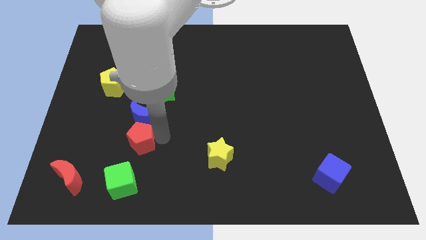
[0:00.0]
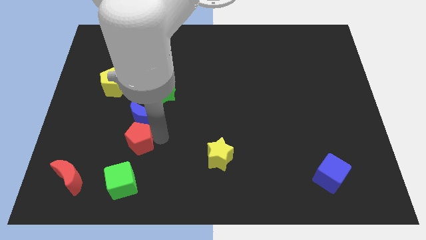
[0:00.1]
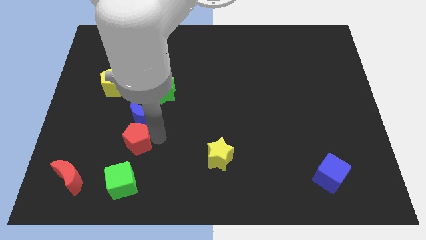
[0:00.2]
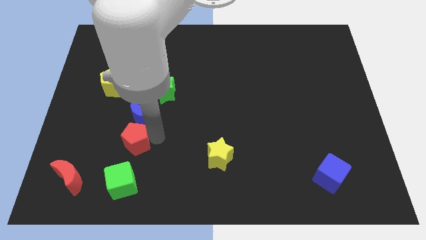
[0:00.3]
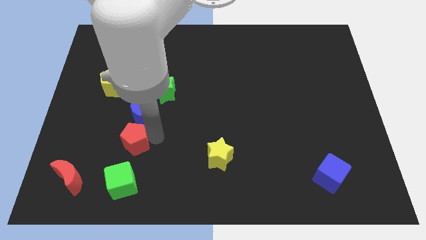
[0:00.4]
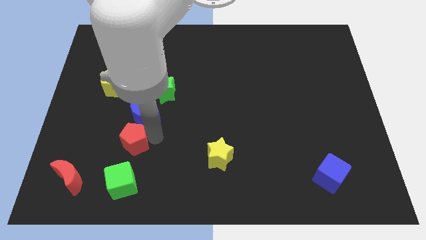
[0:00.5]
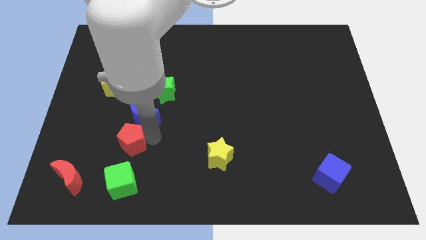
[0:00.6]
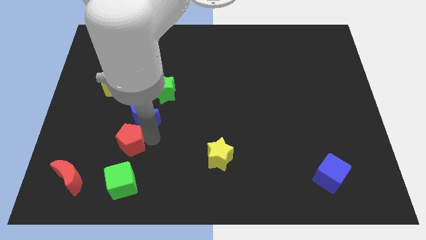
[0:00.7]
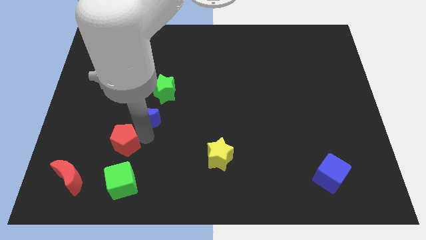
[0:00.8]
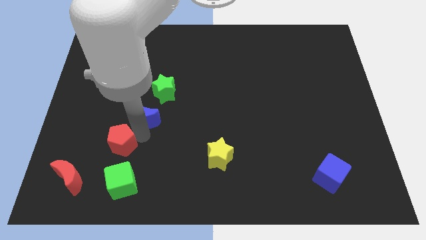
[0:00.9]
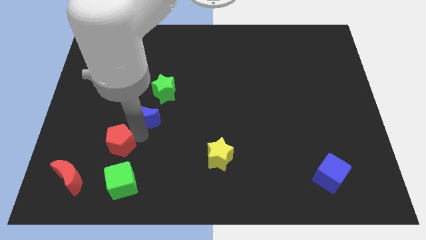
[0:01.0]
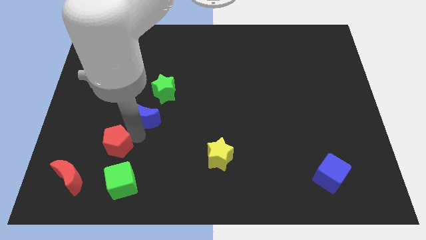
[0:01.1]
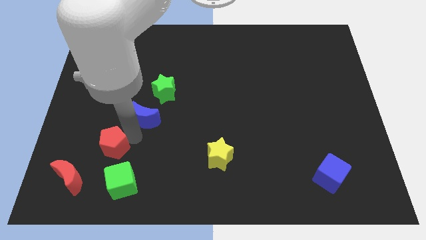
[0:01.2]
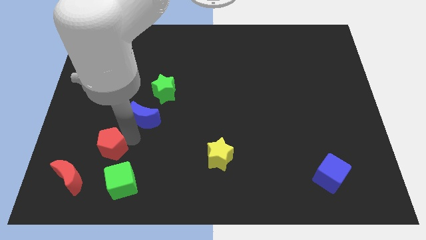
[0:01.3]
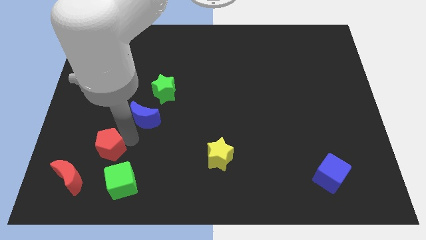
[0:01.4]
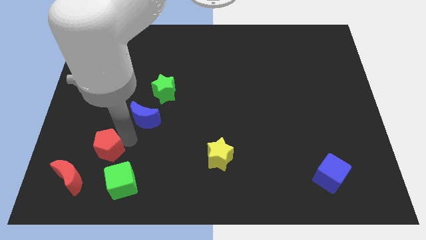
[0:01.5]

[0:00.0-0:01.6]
slide the red pentagon vertically bottom left to the blue moon

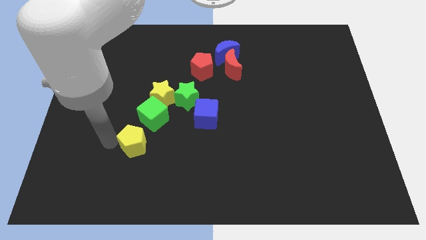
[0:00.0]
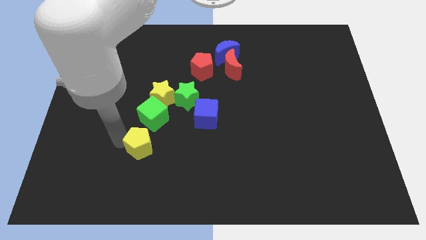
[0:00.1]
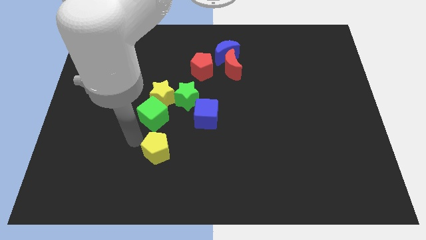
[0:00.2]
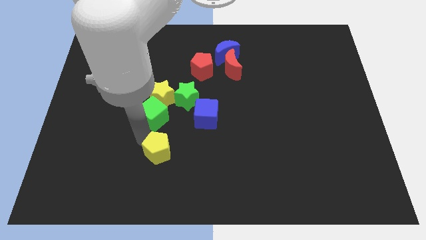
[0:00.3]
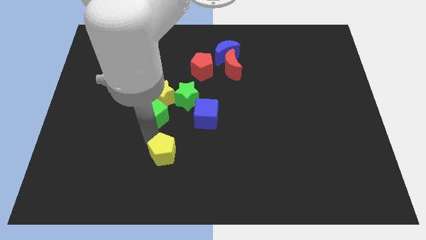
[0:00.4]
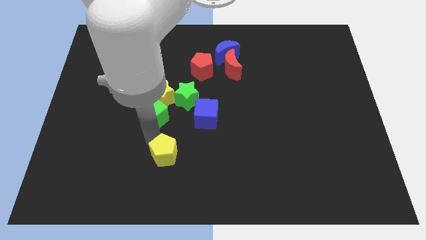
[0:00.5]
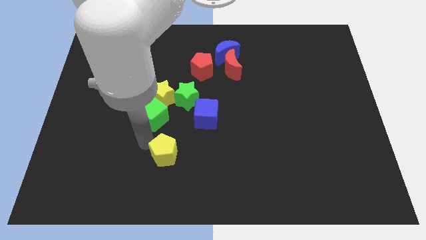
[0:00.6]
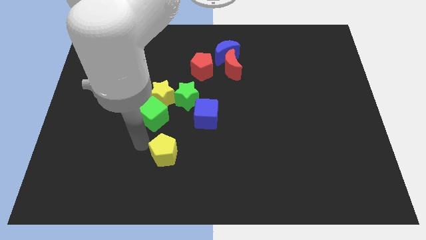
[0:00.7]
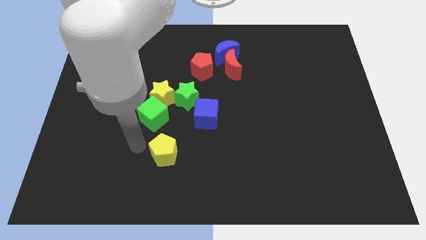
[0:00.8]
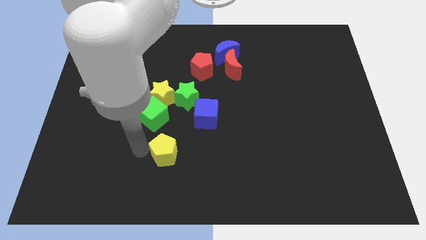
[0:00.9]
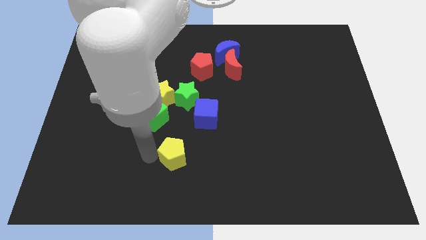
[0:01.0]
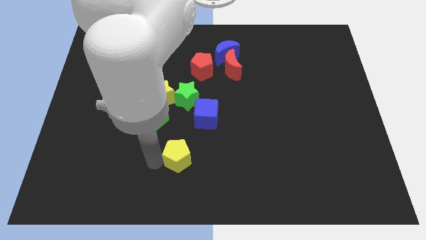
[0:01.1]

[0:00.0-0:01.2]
move yellow pentagon to bottom left of blue cube

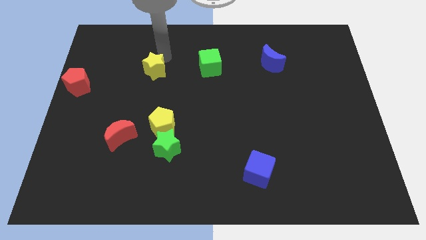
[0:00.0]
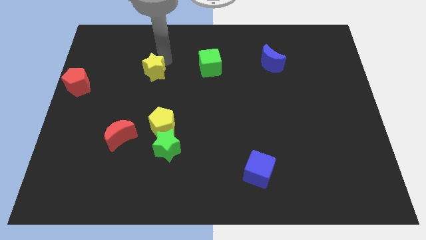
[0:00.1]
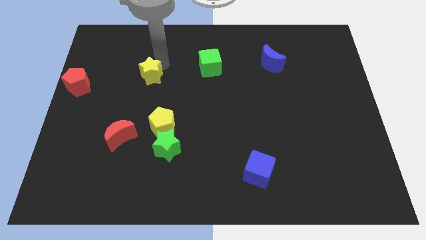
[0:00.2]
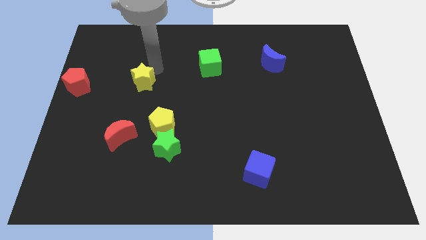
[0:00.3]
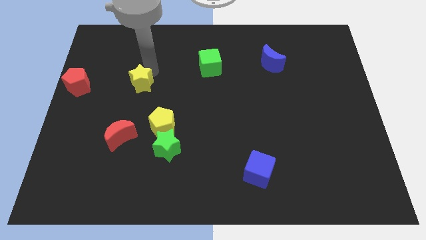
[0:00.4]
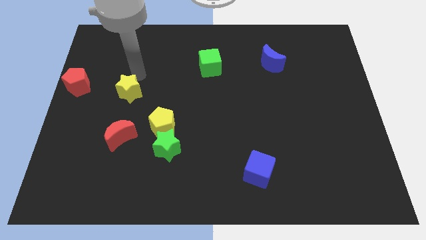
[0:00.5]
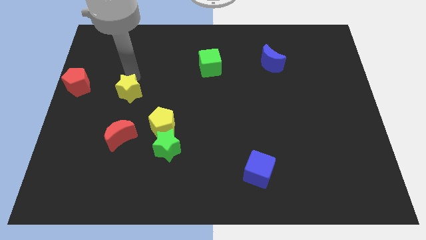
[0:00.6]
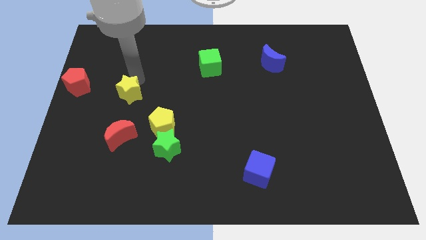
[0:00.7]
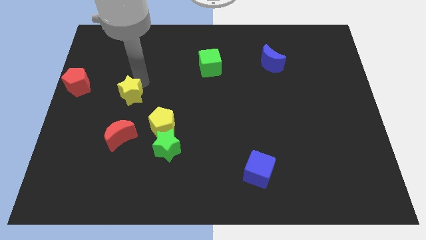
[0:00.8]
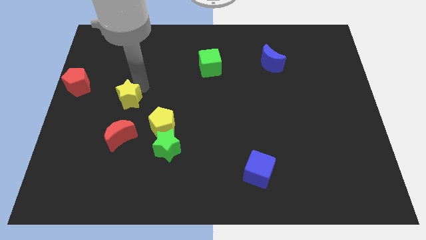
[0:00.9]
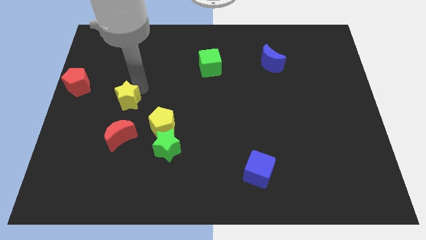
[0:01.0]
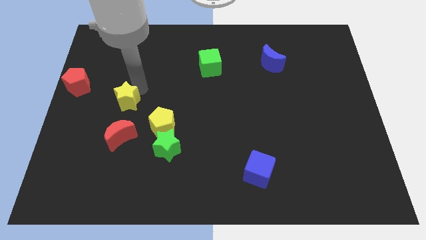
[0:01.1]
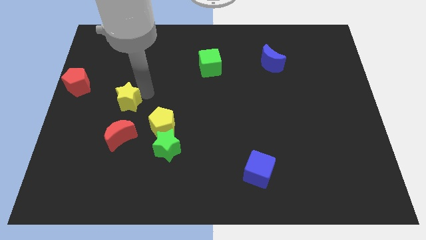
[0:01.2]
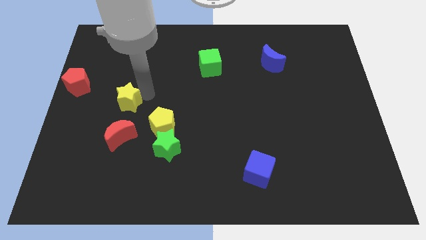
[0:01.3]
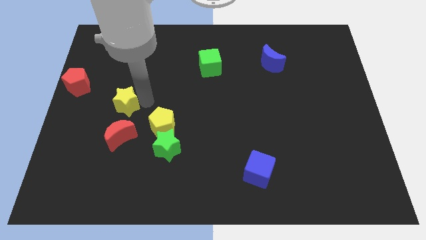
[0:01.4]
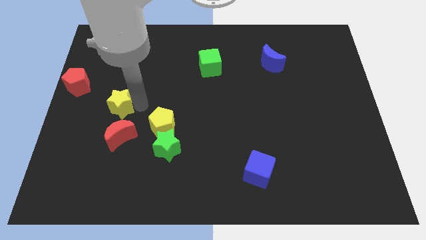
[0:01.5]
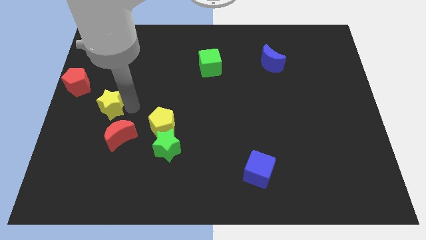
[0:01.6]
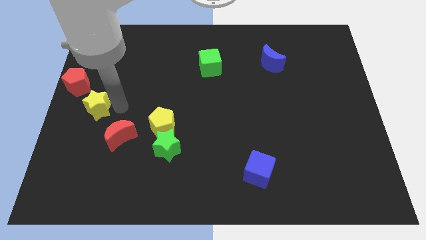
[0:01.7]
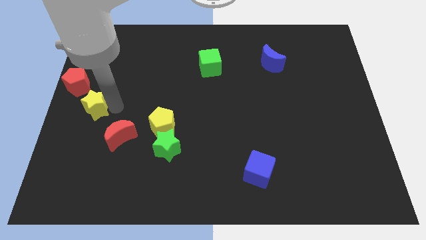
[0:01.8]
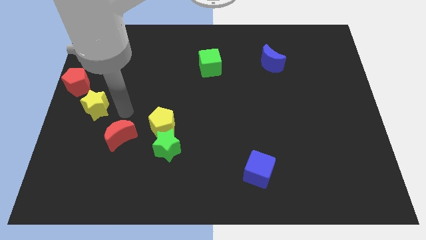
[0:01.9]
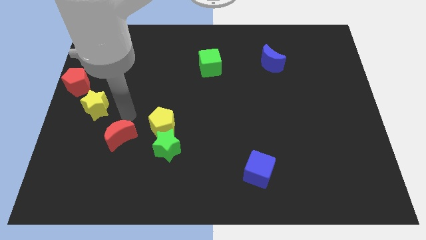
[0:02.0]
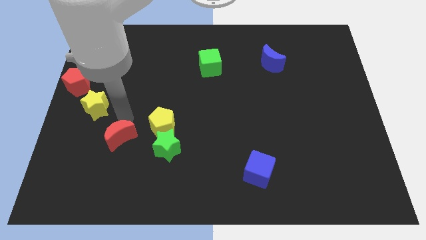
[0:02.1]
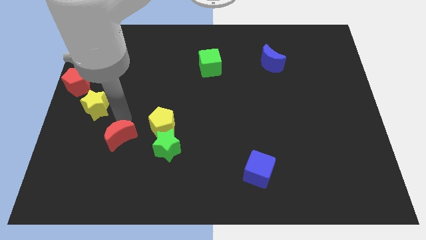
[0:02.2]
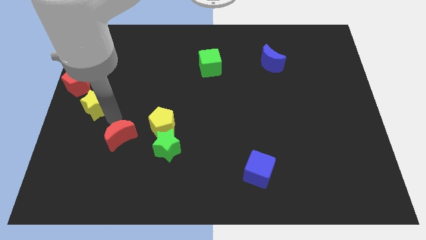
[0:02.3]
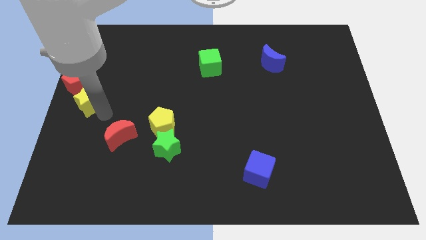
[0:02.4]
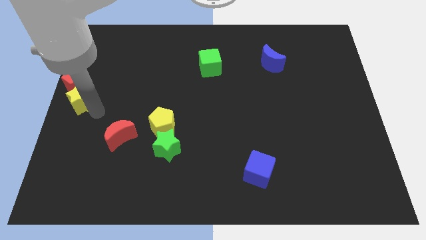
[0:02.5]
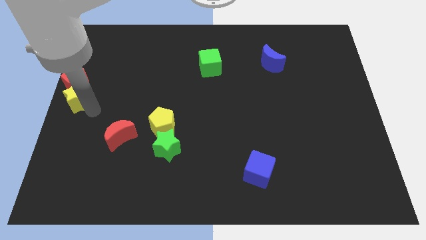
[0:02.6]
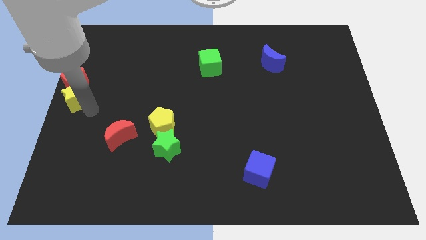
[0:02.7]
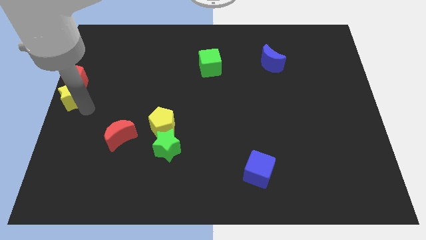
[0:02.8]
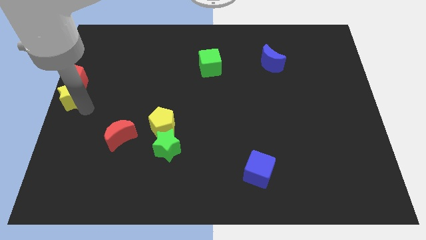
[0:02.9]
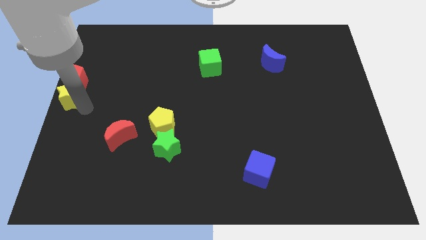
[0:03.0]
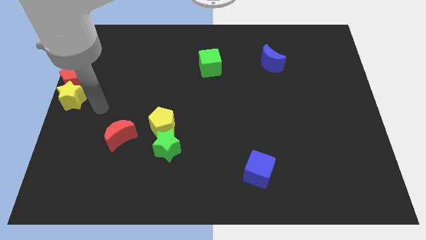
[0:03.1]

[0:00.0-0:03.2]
place the yellow star below the red pentagon

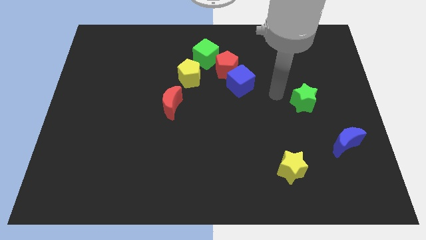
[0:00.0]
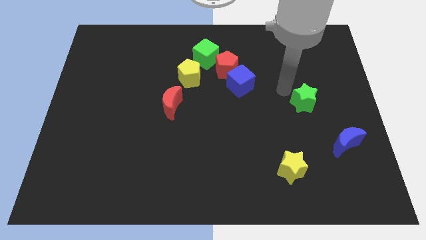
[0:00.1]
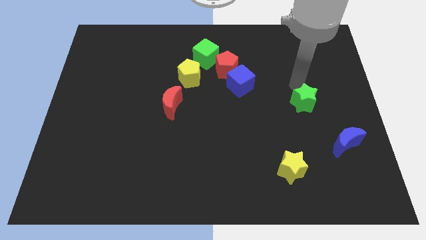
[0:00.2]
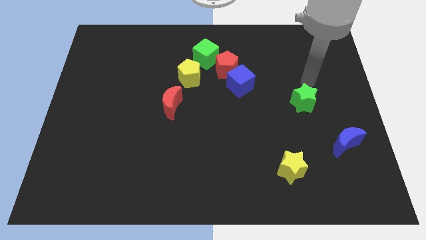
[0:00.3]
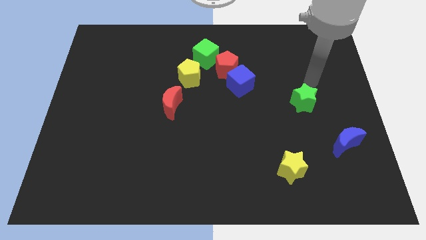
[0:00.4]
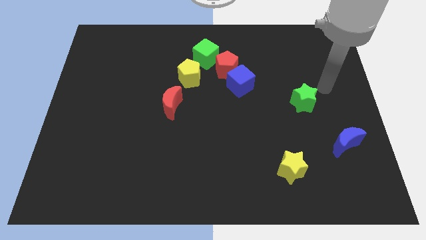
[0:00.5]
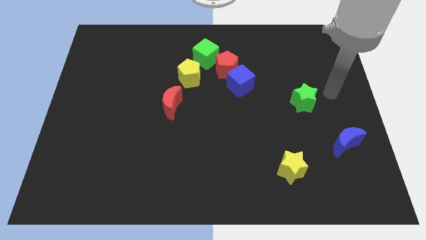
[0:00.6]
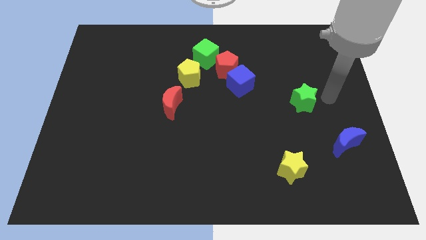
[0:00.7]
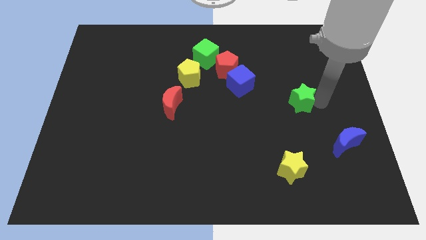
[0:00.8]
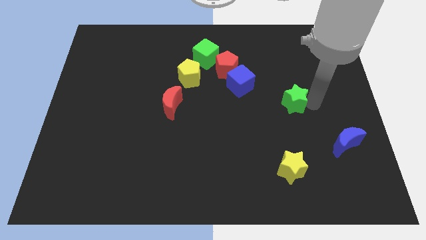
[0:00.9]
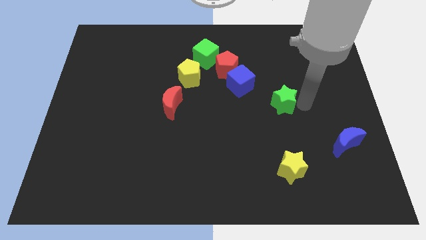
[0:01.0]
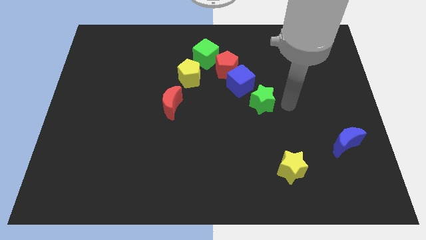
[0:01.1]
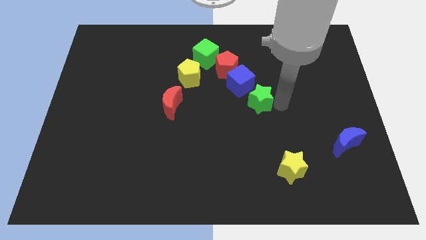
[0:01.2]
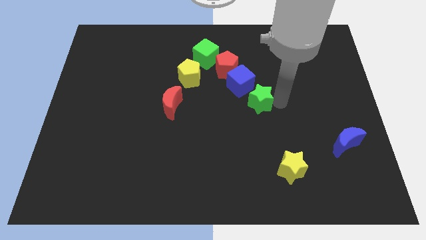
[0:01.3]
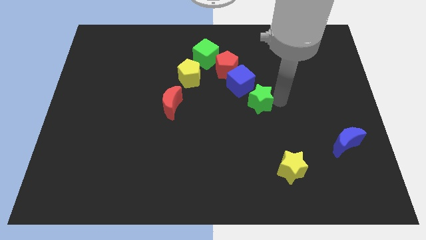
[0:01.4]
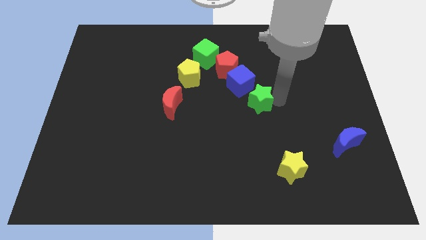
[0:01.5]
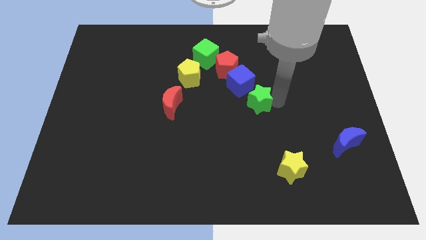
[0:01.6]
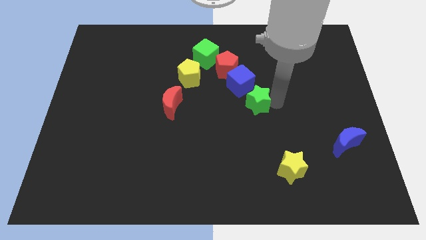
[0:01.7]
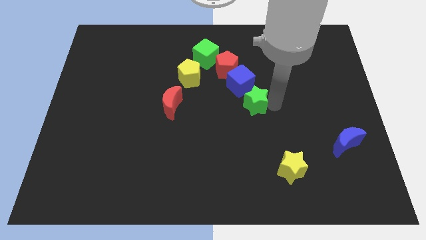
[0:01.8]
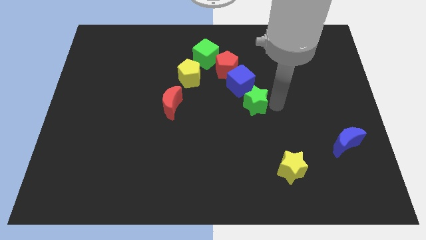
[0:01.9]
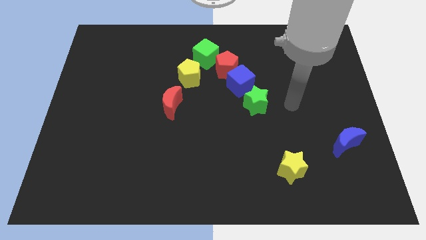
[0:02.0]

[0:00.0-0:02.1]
place the green star diagonal to the blue cube

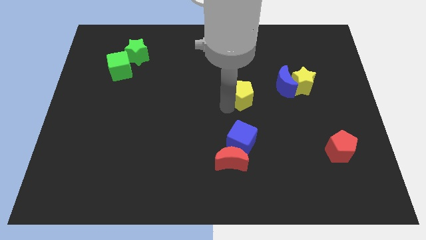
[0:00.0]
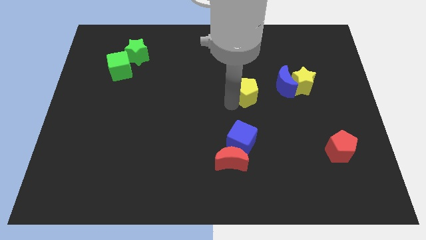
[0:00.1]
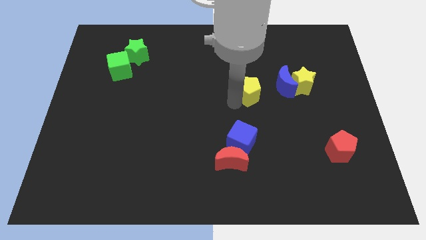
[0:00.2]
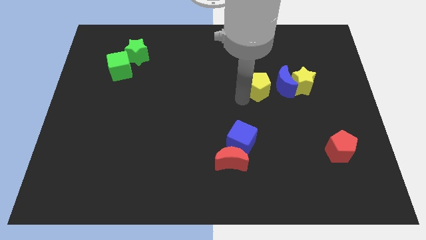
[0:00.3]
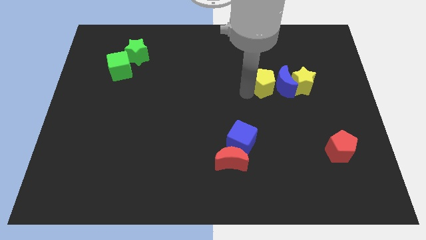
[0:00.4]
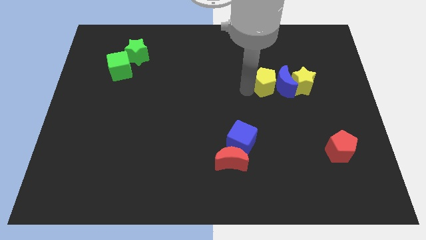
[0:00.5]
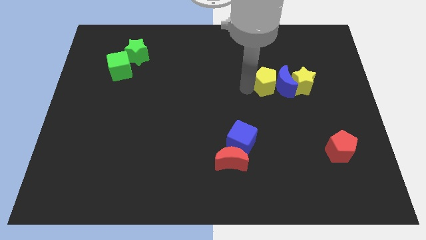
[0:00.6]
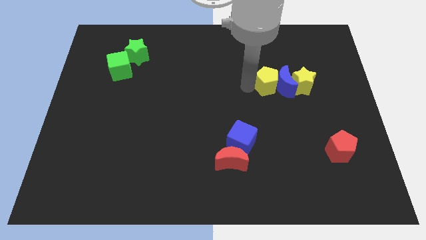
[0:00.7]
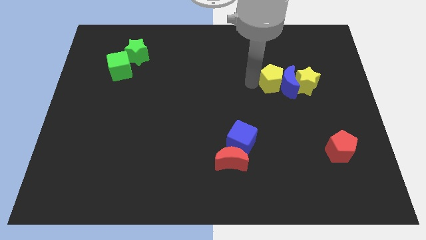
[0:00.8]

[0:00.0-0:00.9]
put the yellow pentagon to the left side of blue crescent
